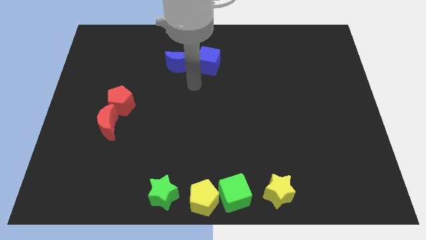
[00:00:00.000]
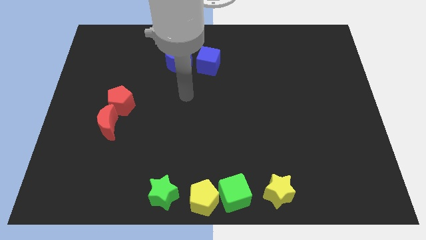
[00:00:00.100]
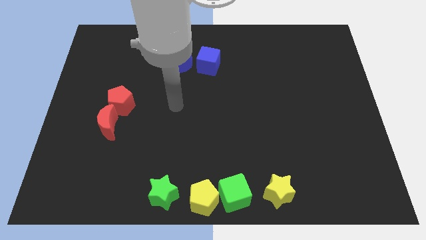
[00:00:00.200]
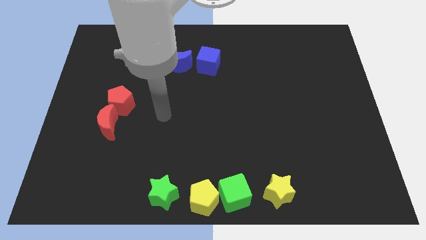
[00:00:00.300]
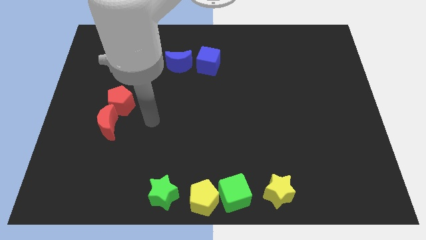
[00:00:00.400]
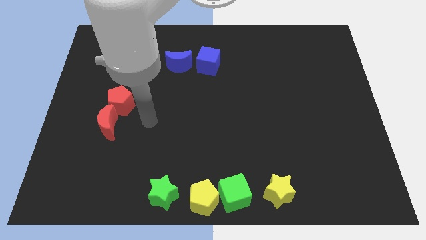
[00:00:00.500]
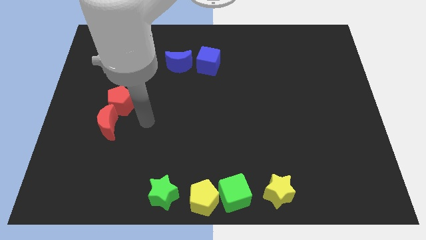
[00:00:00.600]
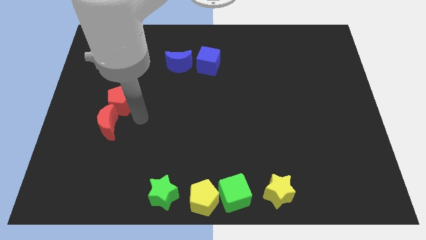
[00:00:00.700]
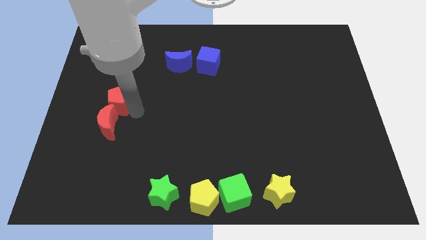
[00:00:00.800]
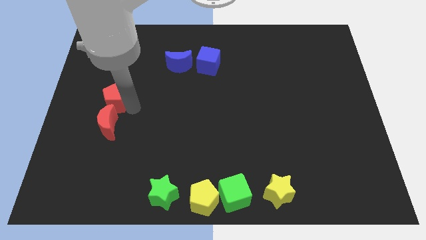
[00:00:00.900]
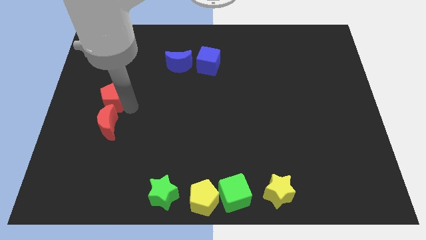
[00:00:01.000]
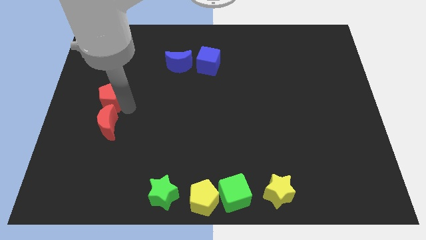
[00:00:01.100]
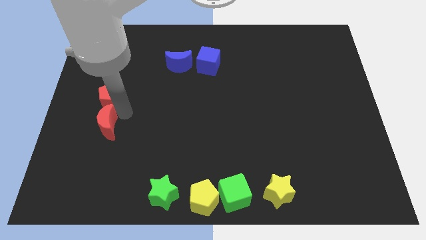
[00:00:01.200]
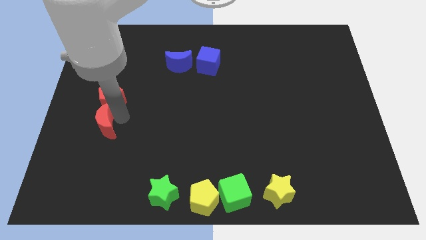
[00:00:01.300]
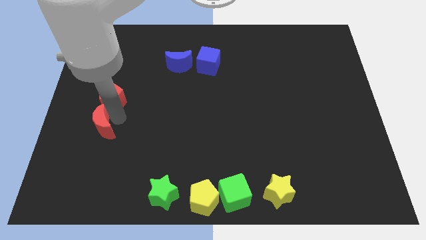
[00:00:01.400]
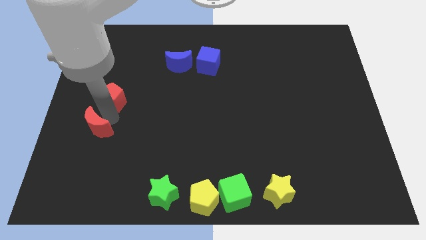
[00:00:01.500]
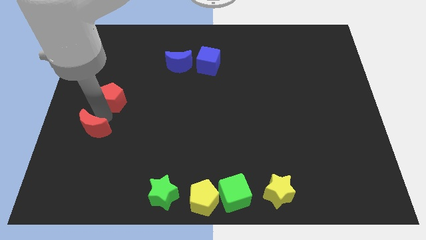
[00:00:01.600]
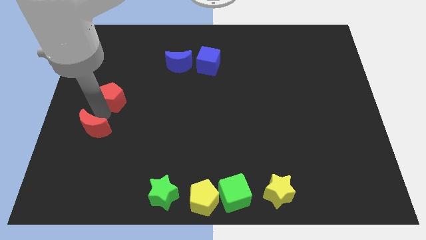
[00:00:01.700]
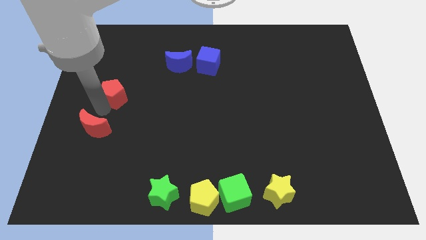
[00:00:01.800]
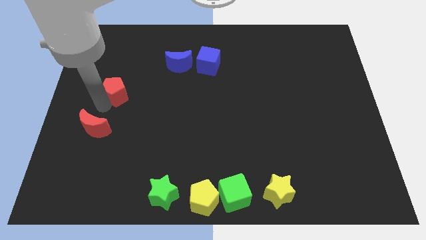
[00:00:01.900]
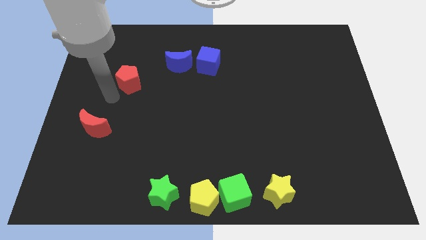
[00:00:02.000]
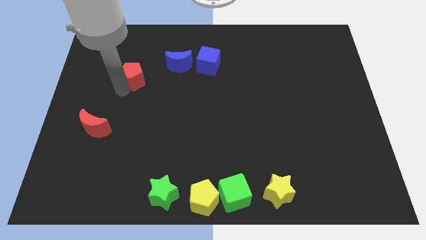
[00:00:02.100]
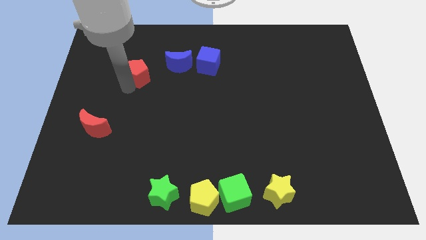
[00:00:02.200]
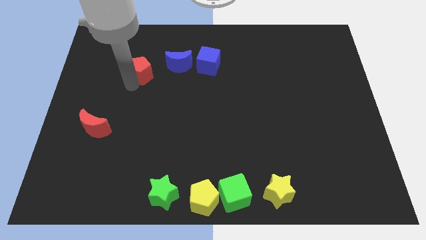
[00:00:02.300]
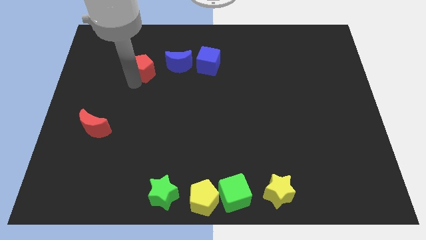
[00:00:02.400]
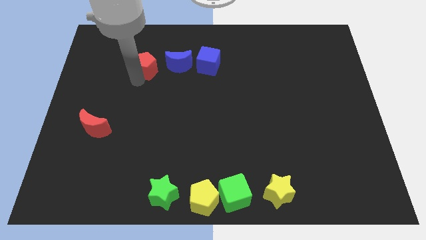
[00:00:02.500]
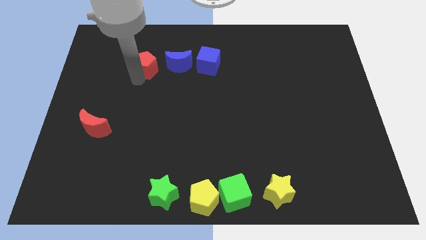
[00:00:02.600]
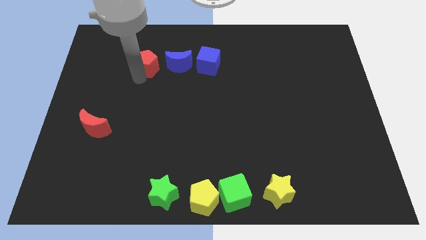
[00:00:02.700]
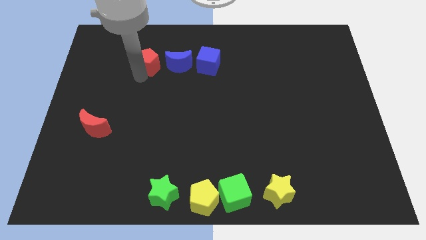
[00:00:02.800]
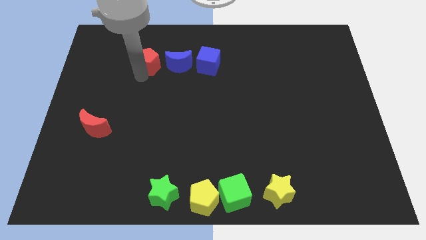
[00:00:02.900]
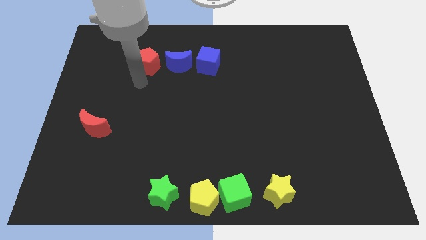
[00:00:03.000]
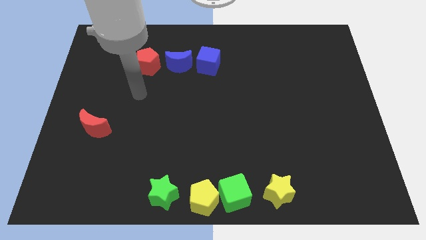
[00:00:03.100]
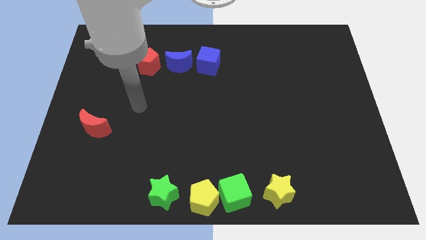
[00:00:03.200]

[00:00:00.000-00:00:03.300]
separate the red crescent from red pentagon

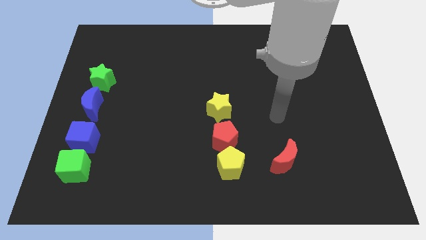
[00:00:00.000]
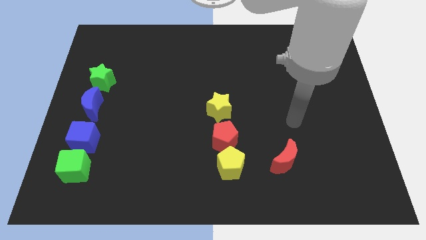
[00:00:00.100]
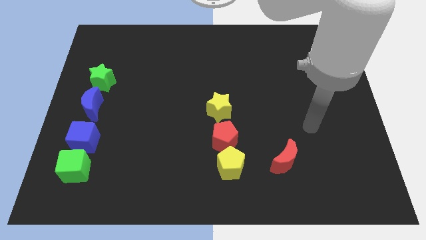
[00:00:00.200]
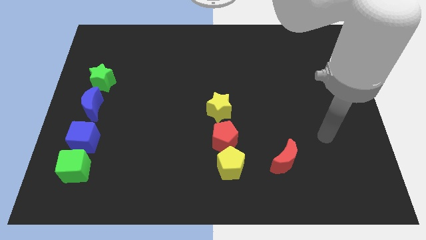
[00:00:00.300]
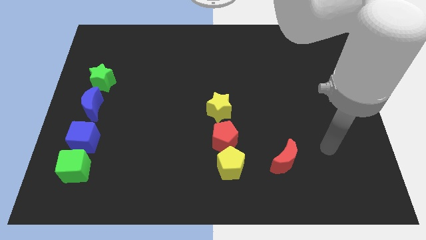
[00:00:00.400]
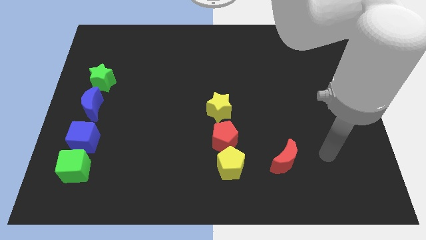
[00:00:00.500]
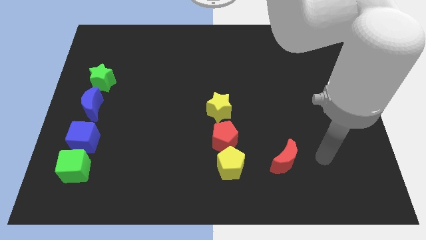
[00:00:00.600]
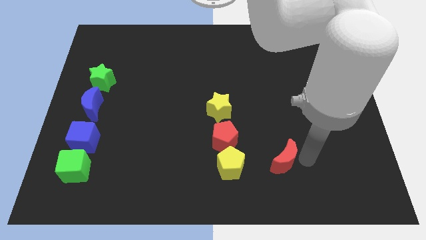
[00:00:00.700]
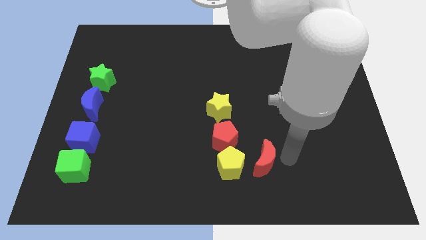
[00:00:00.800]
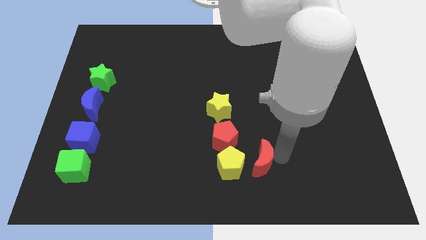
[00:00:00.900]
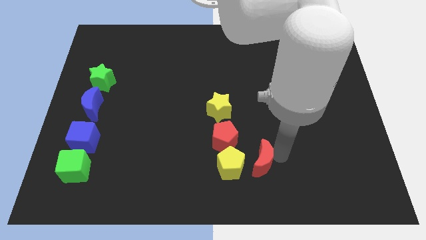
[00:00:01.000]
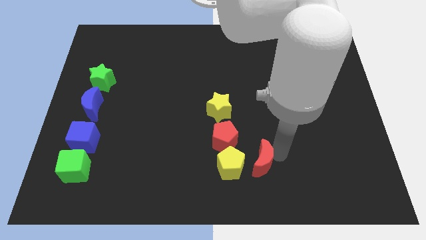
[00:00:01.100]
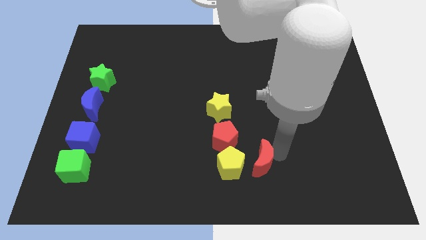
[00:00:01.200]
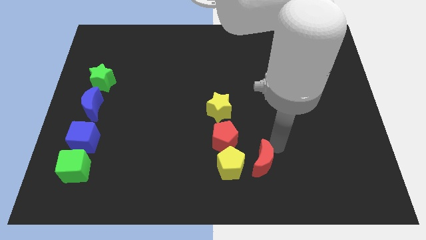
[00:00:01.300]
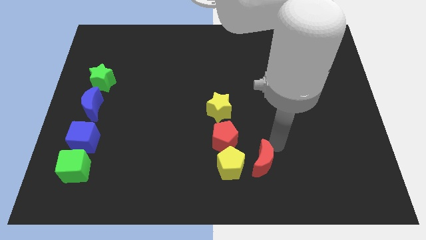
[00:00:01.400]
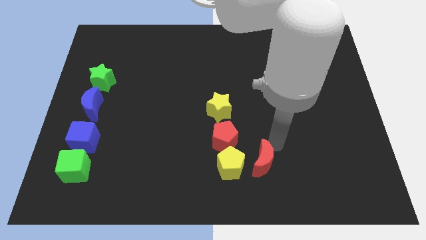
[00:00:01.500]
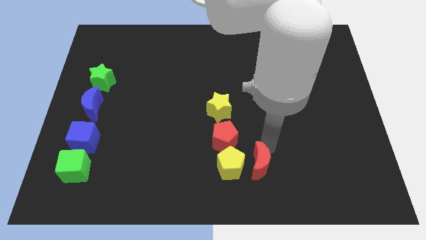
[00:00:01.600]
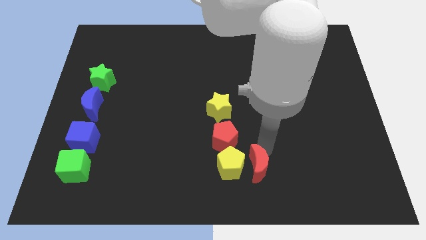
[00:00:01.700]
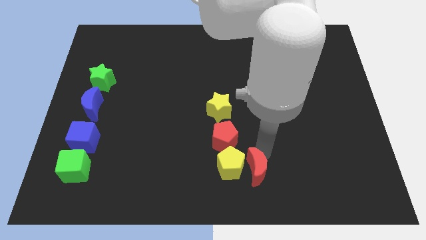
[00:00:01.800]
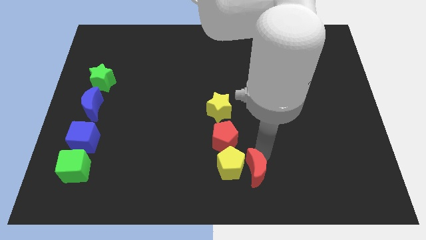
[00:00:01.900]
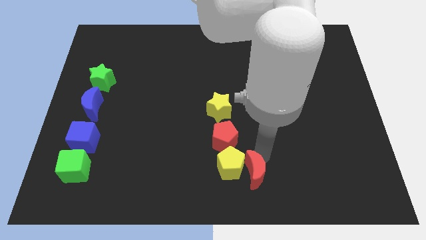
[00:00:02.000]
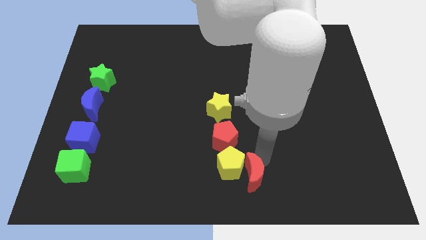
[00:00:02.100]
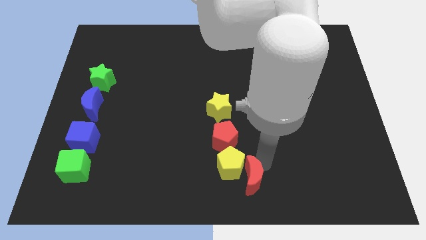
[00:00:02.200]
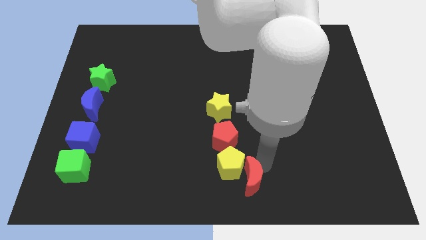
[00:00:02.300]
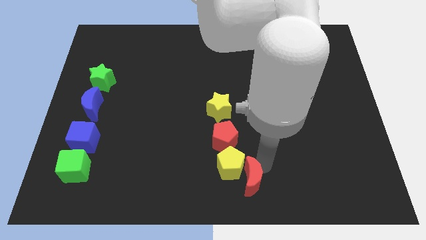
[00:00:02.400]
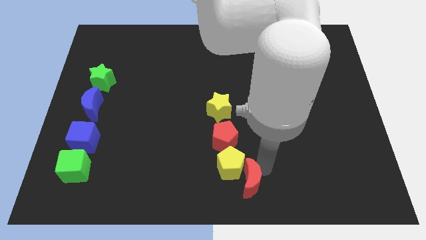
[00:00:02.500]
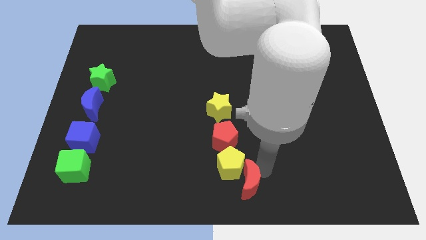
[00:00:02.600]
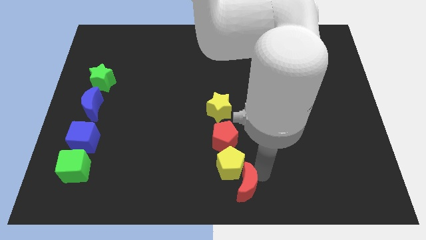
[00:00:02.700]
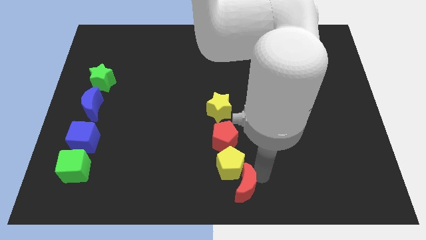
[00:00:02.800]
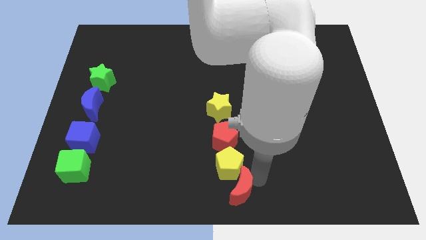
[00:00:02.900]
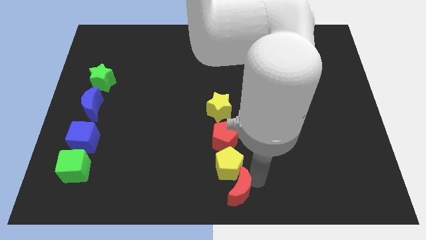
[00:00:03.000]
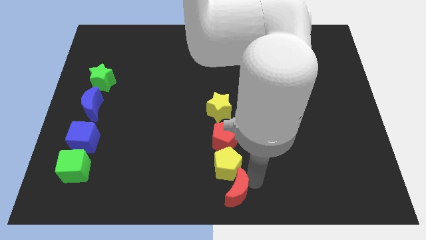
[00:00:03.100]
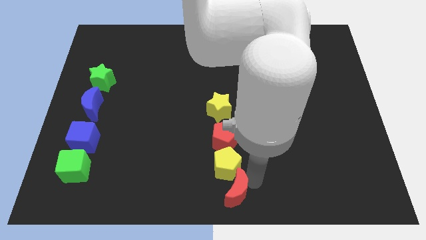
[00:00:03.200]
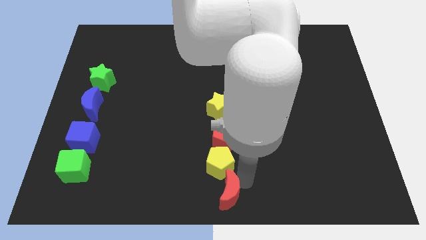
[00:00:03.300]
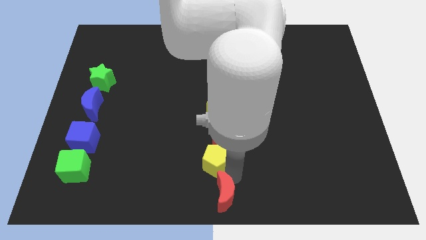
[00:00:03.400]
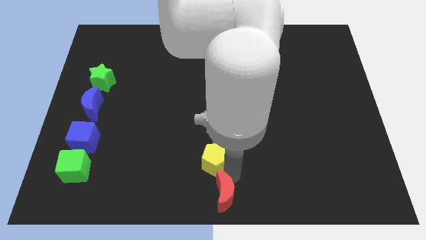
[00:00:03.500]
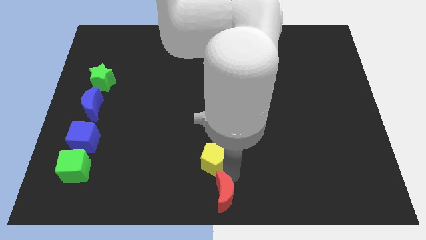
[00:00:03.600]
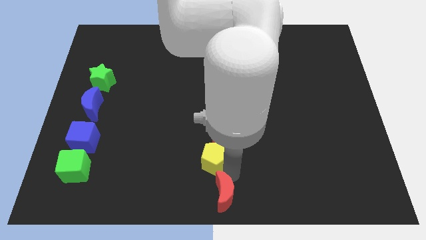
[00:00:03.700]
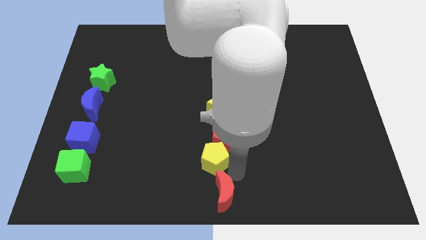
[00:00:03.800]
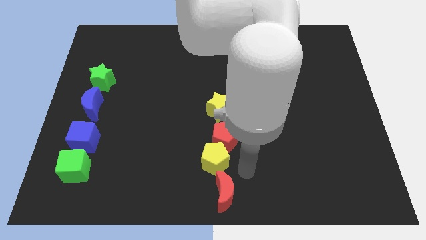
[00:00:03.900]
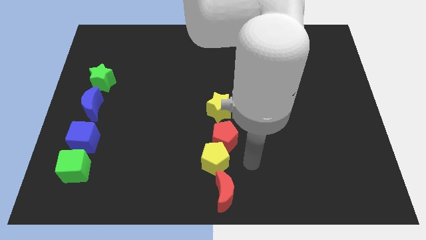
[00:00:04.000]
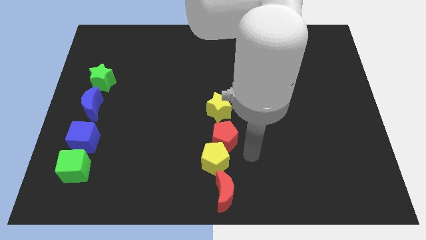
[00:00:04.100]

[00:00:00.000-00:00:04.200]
slide the red moon vertically below the red pentagon

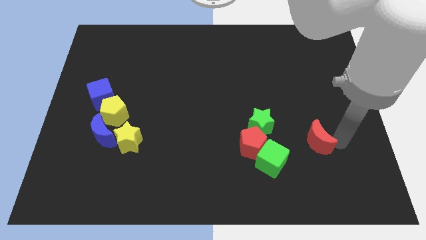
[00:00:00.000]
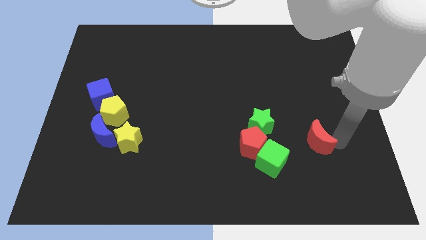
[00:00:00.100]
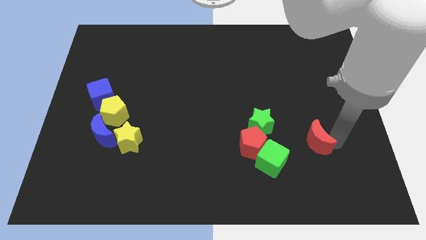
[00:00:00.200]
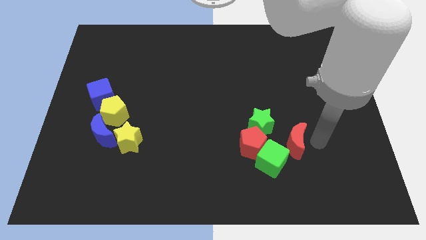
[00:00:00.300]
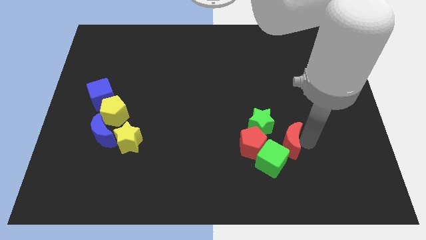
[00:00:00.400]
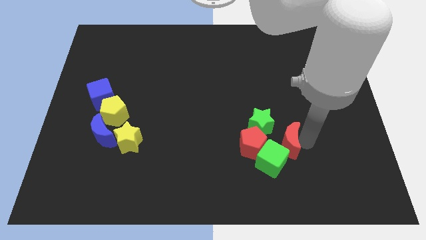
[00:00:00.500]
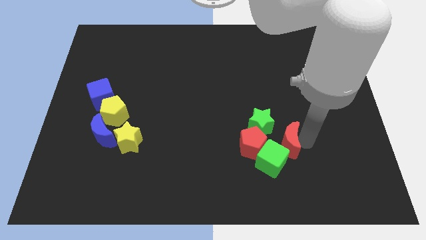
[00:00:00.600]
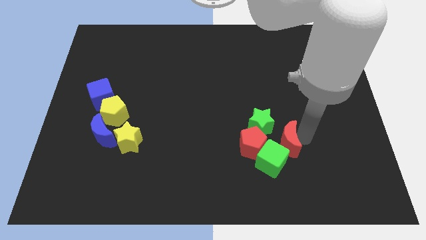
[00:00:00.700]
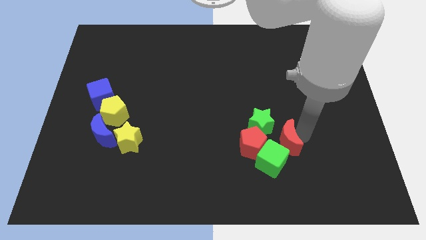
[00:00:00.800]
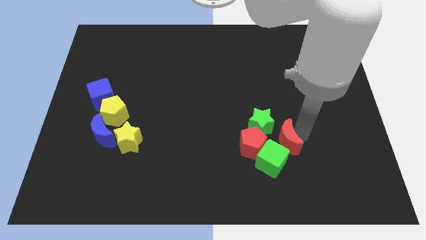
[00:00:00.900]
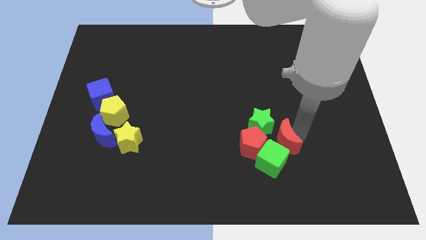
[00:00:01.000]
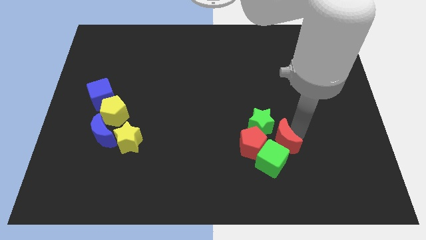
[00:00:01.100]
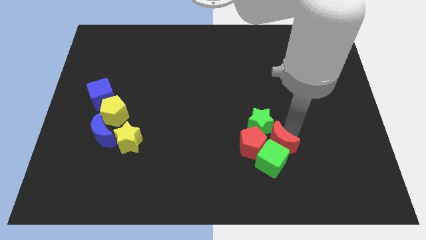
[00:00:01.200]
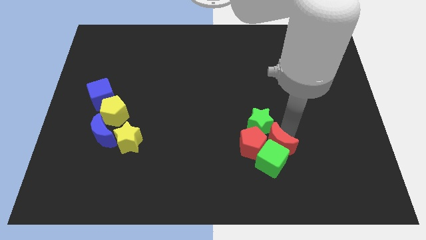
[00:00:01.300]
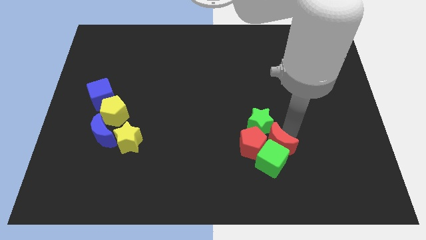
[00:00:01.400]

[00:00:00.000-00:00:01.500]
move the red crescent slightly to the left
